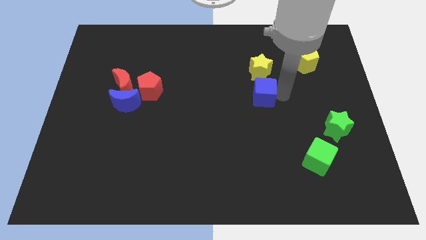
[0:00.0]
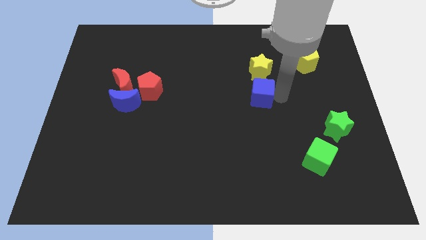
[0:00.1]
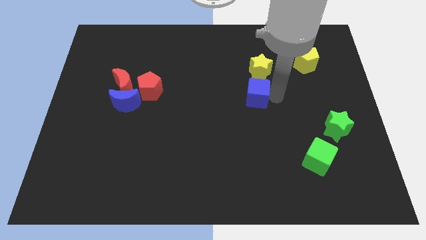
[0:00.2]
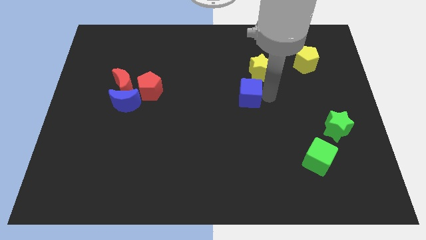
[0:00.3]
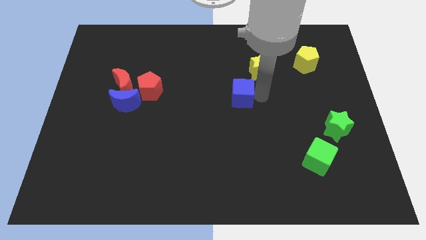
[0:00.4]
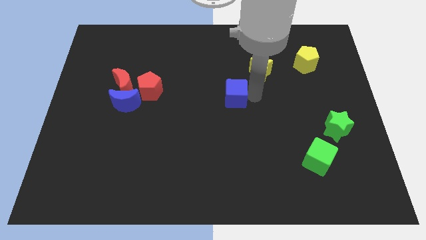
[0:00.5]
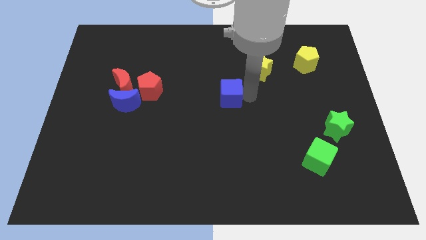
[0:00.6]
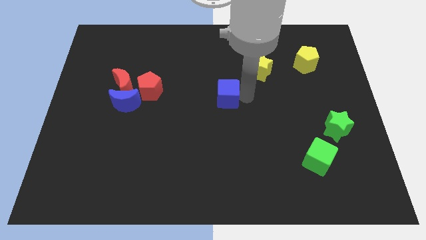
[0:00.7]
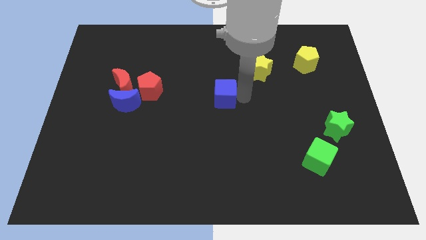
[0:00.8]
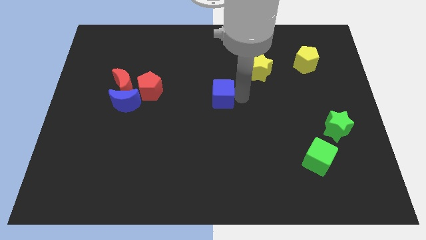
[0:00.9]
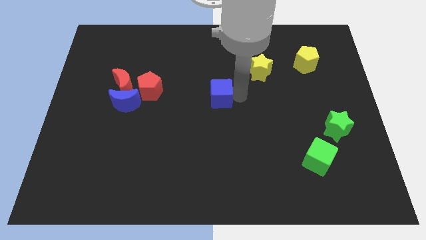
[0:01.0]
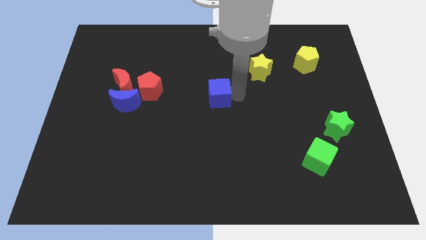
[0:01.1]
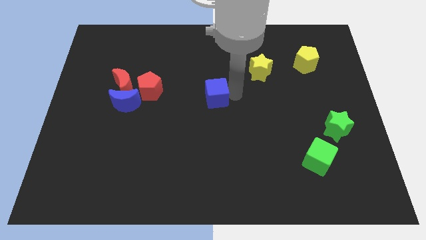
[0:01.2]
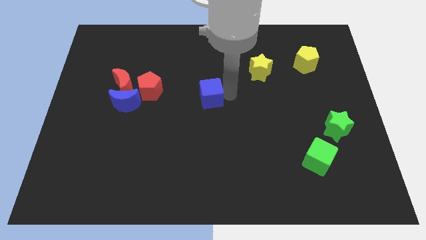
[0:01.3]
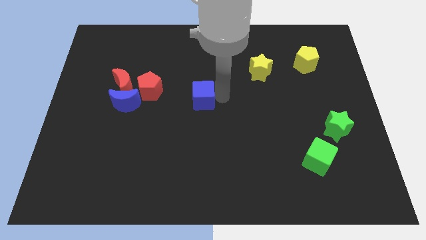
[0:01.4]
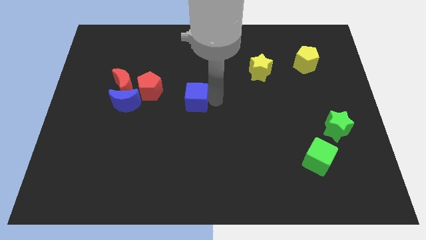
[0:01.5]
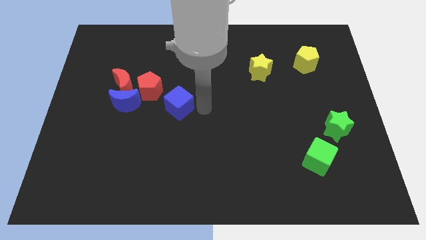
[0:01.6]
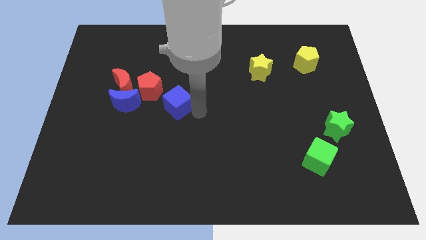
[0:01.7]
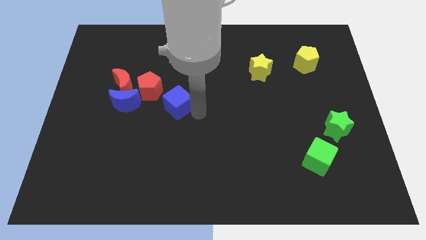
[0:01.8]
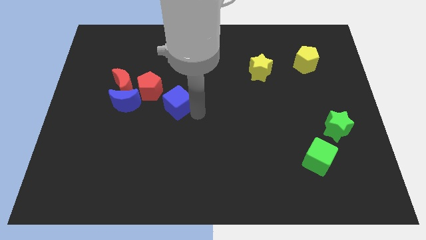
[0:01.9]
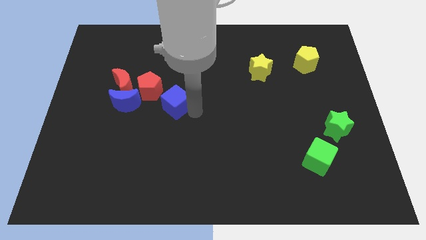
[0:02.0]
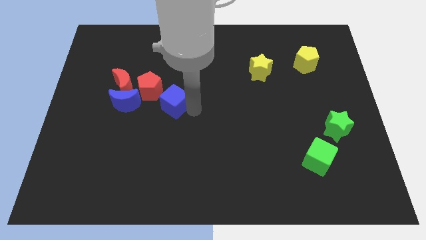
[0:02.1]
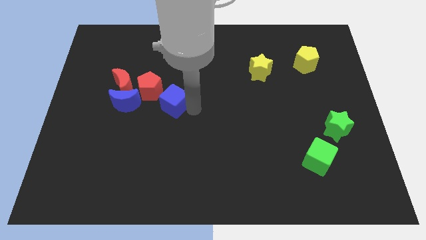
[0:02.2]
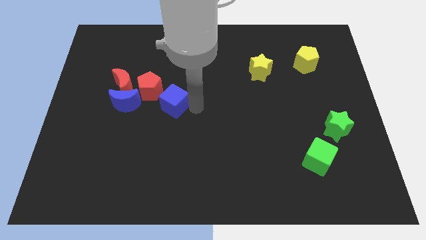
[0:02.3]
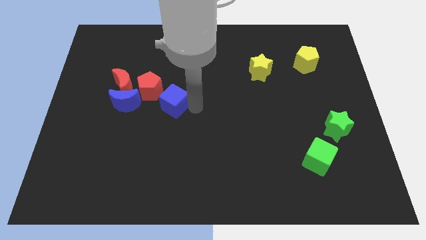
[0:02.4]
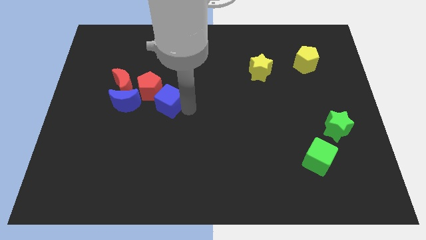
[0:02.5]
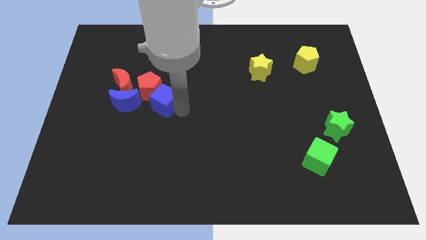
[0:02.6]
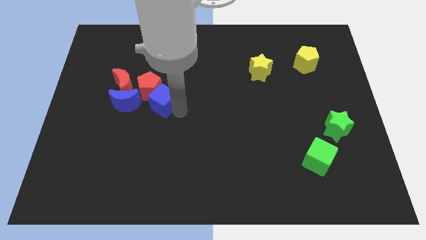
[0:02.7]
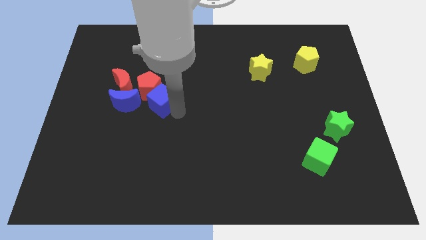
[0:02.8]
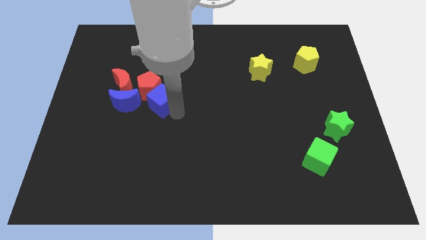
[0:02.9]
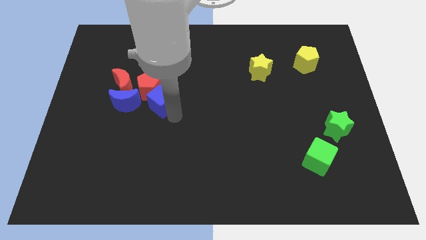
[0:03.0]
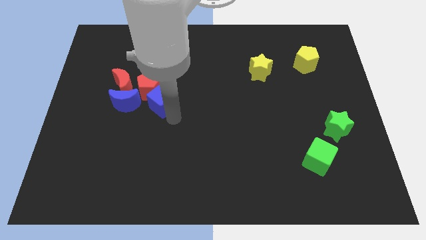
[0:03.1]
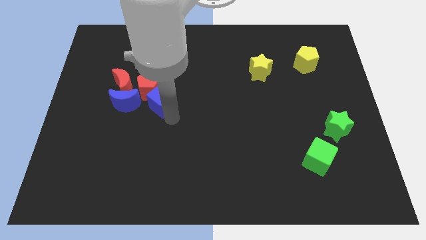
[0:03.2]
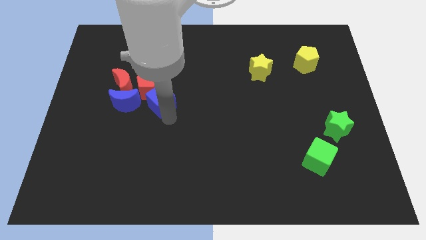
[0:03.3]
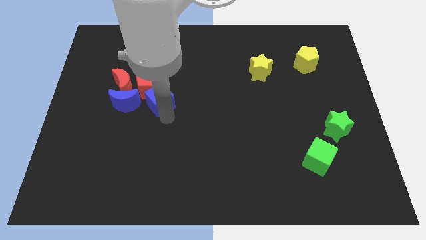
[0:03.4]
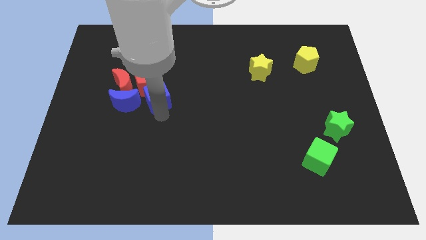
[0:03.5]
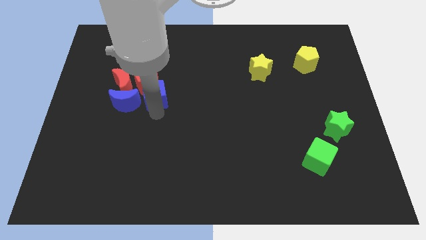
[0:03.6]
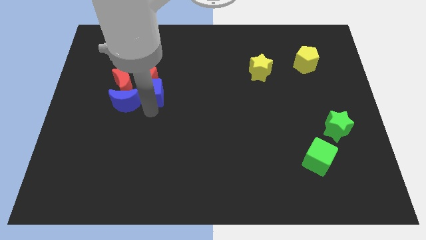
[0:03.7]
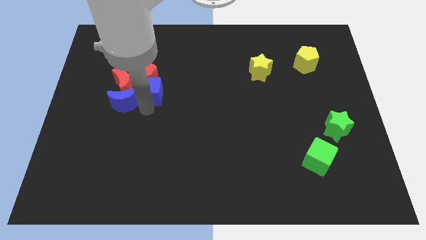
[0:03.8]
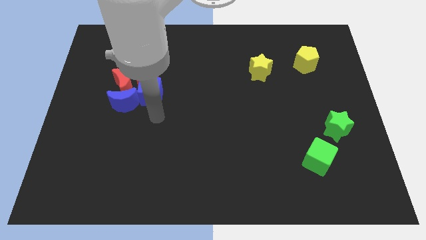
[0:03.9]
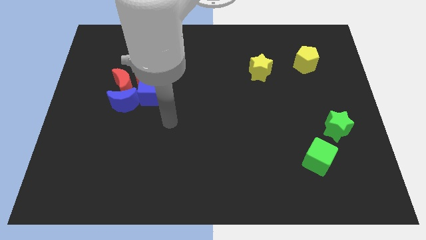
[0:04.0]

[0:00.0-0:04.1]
slide blue cube to the right of blue moon

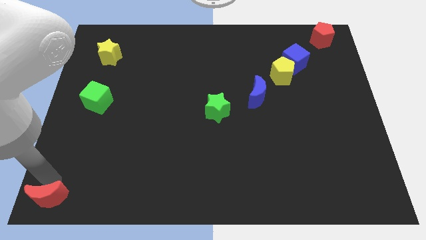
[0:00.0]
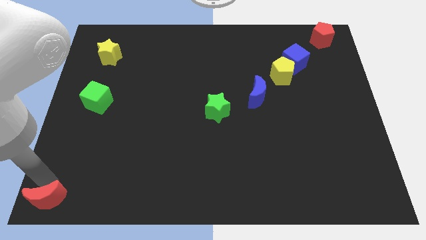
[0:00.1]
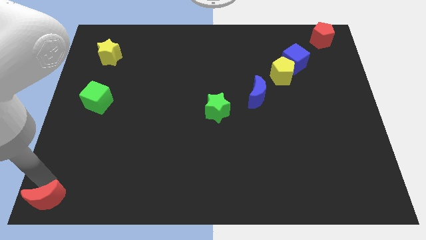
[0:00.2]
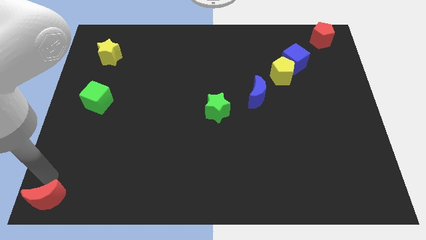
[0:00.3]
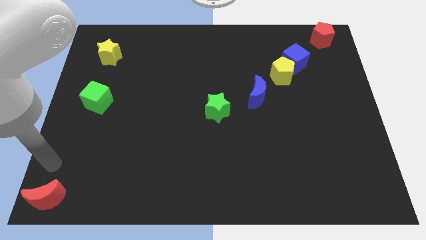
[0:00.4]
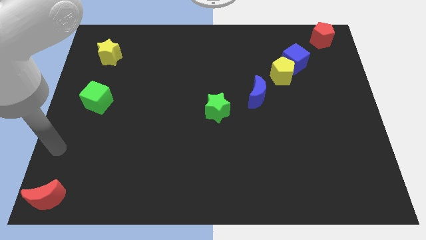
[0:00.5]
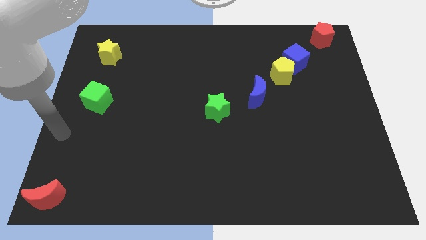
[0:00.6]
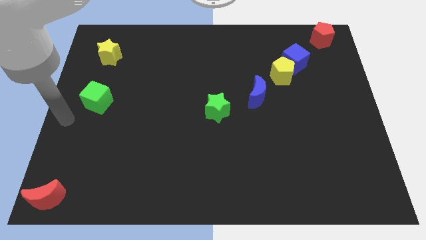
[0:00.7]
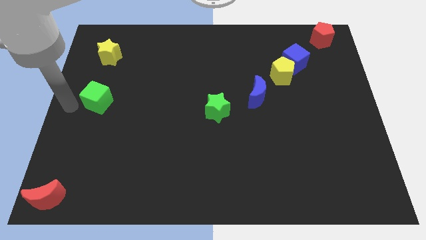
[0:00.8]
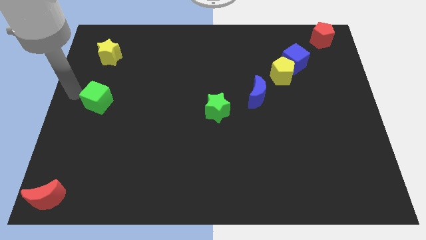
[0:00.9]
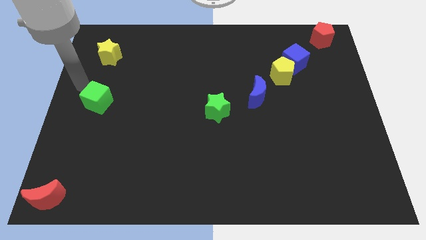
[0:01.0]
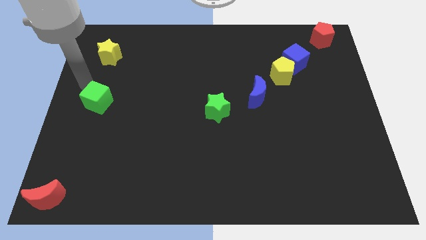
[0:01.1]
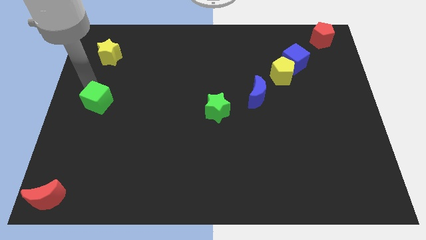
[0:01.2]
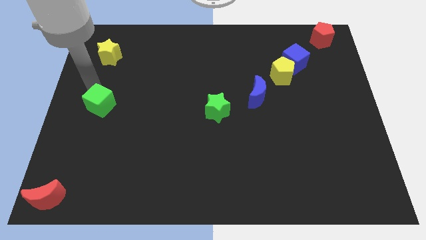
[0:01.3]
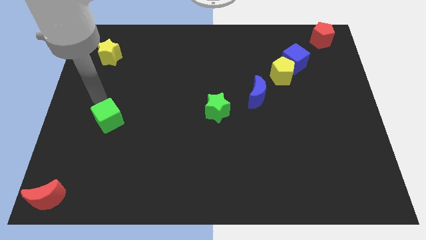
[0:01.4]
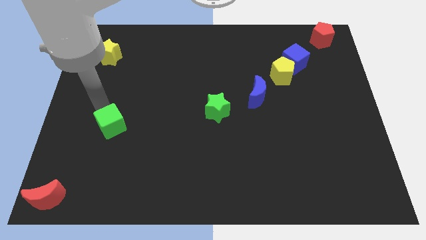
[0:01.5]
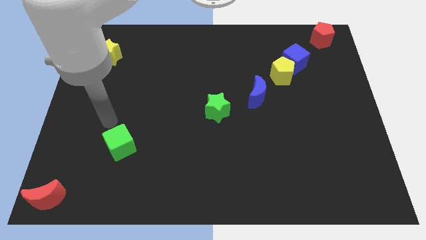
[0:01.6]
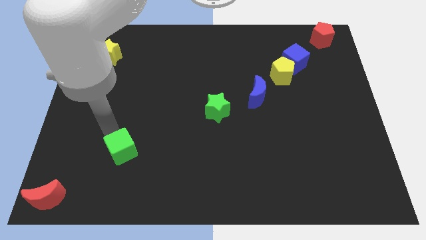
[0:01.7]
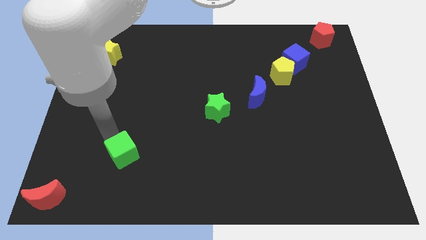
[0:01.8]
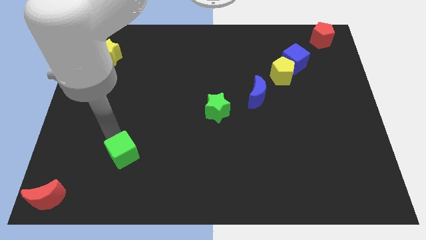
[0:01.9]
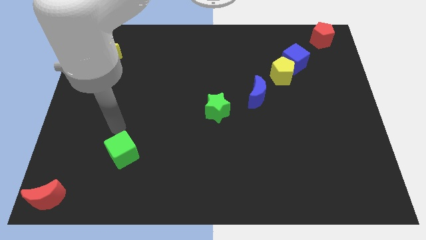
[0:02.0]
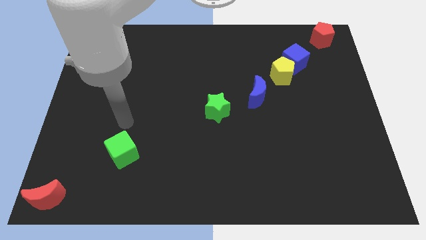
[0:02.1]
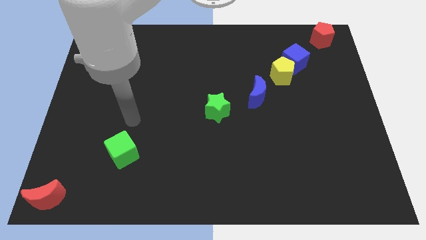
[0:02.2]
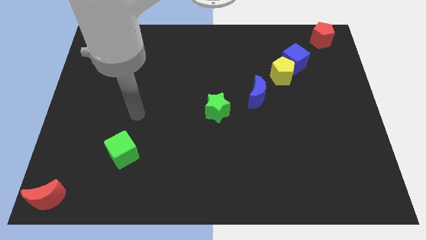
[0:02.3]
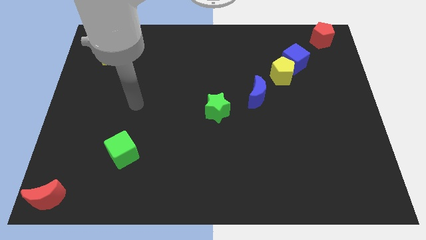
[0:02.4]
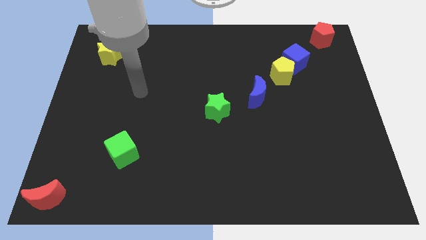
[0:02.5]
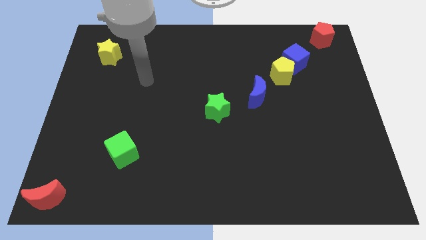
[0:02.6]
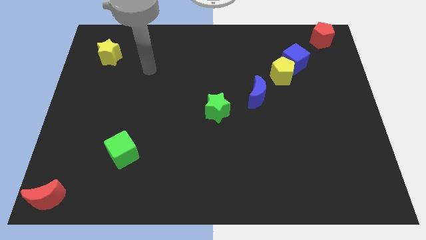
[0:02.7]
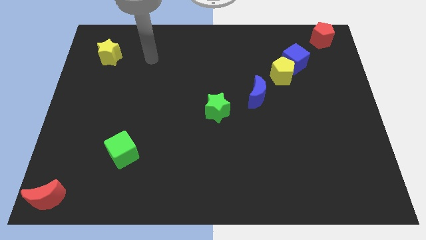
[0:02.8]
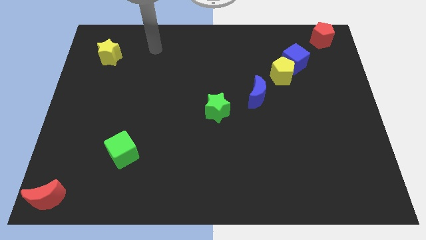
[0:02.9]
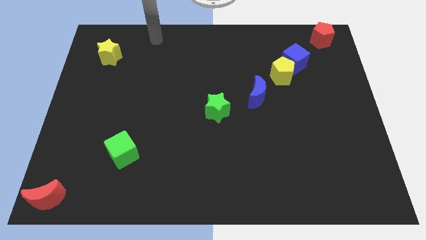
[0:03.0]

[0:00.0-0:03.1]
move the green cube top right to the red moon

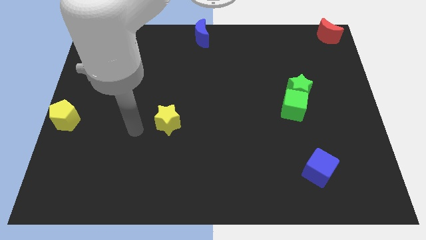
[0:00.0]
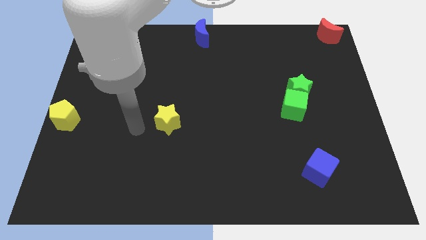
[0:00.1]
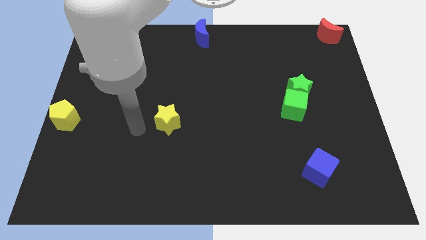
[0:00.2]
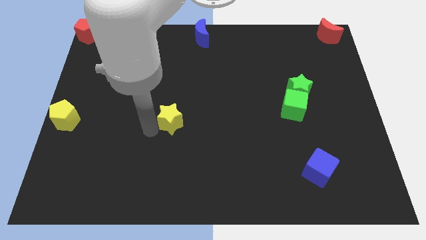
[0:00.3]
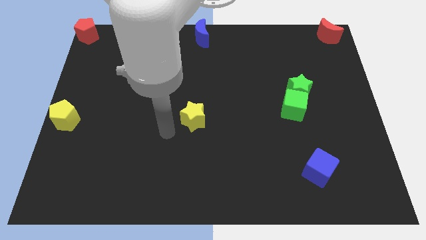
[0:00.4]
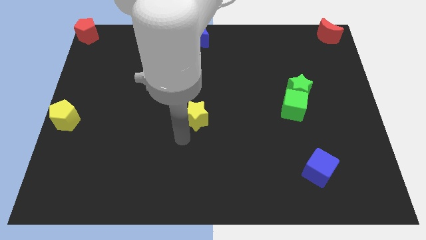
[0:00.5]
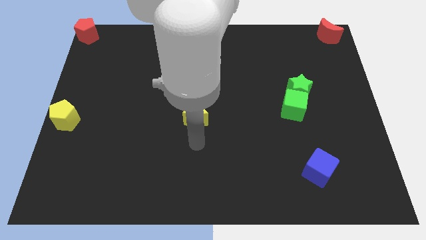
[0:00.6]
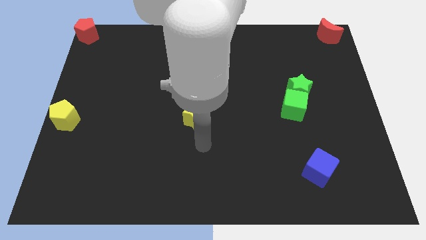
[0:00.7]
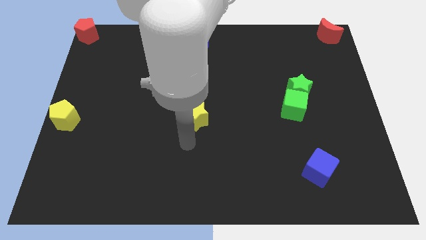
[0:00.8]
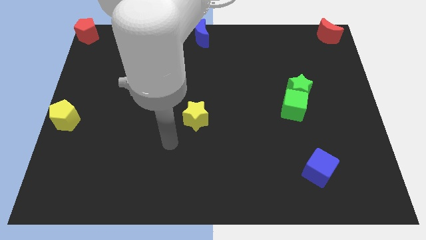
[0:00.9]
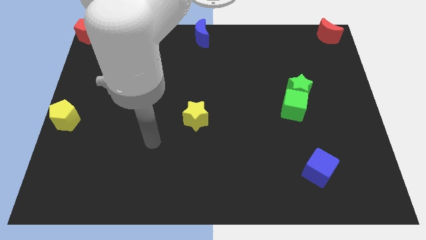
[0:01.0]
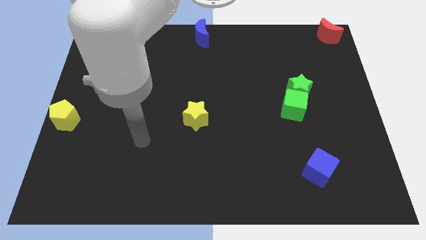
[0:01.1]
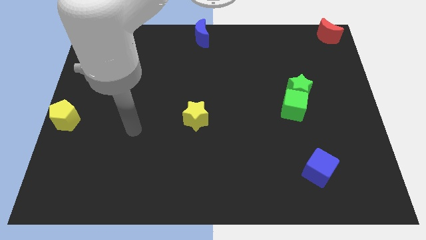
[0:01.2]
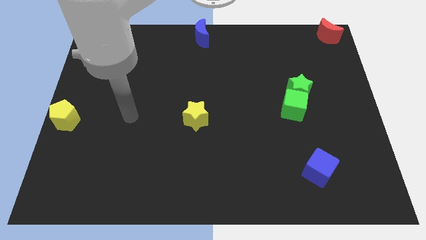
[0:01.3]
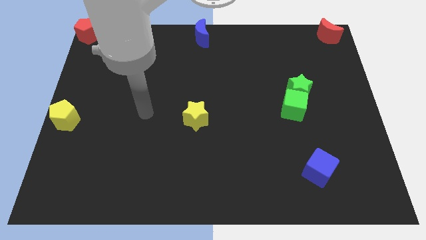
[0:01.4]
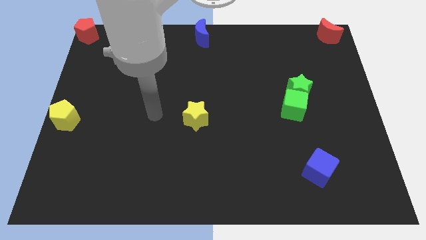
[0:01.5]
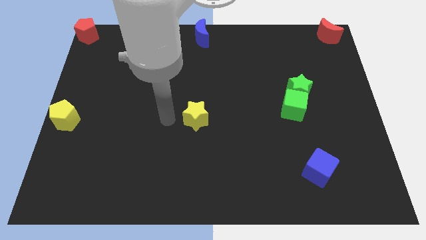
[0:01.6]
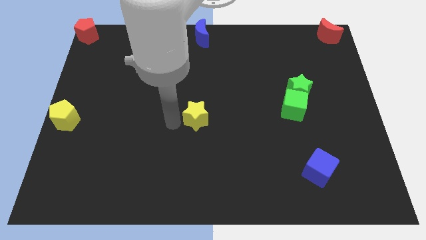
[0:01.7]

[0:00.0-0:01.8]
push the yellow star towards the center of the board
